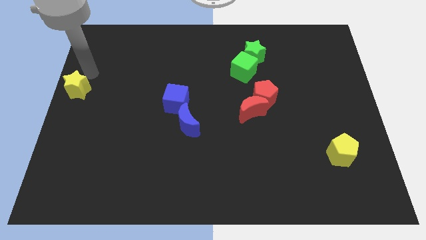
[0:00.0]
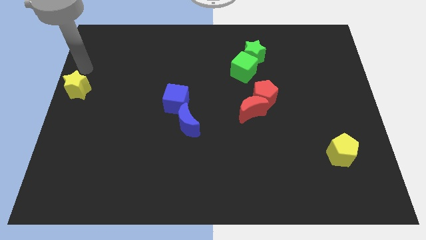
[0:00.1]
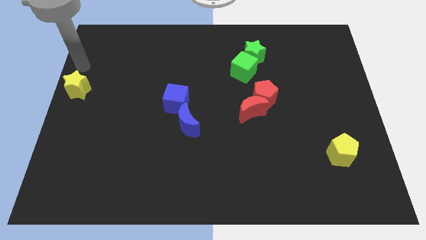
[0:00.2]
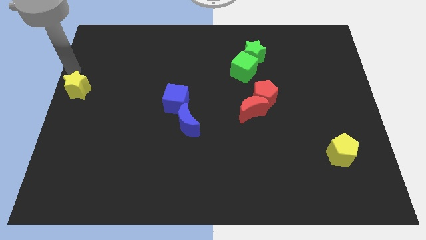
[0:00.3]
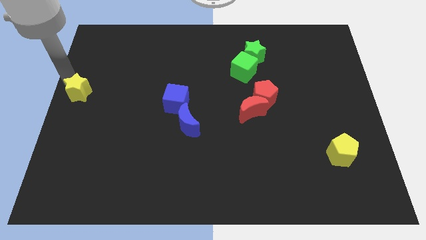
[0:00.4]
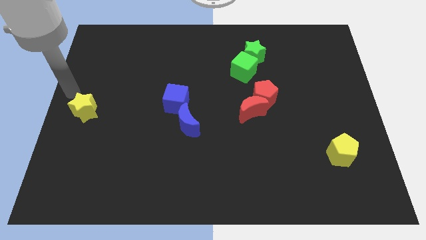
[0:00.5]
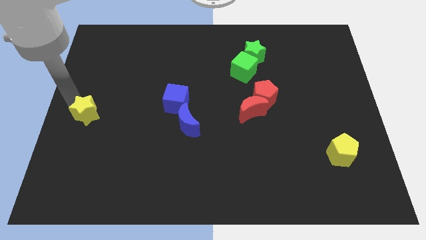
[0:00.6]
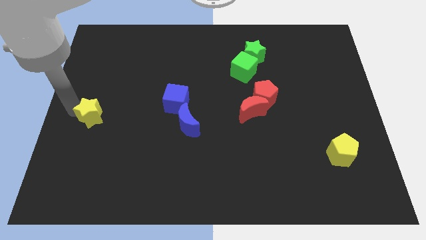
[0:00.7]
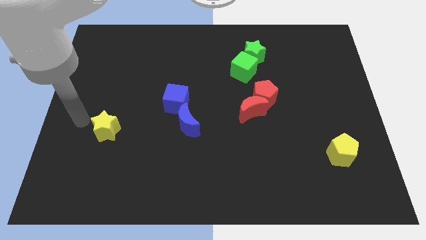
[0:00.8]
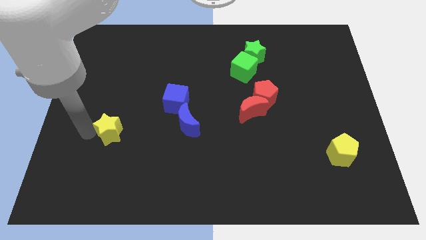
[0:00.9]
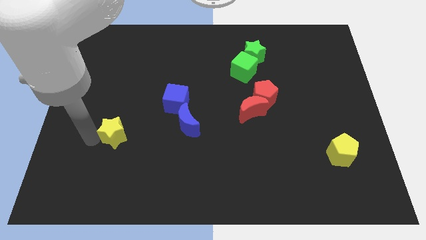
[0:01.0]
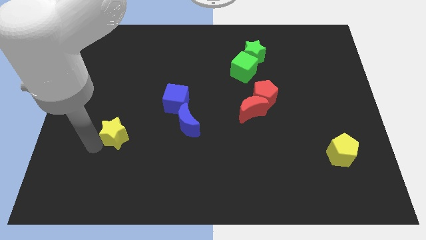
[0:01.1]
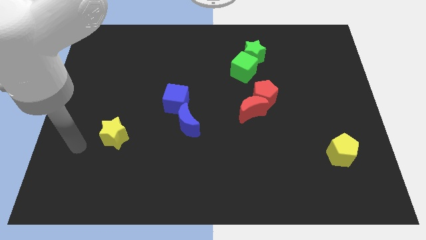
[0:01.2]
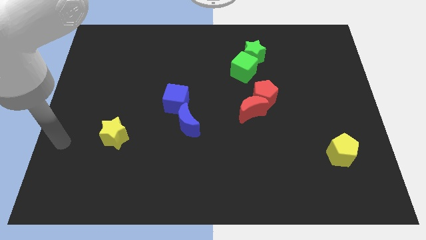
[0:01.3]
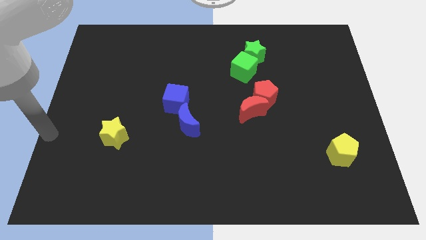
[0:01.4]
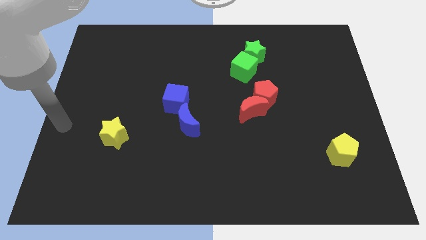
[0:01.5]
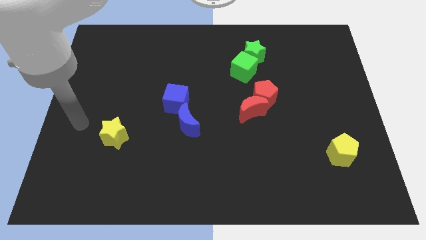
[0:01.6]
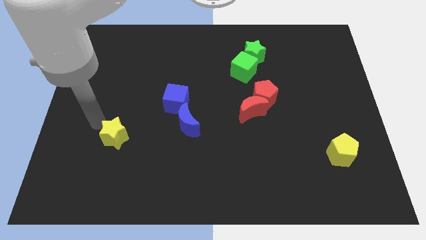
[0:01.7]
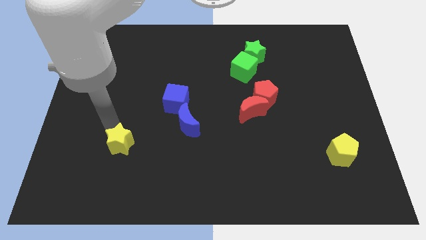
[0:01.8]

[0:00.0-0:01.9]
move the yellow star

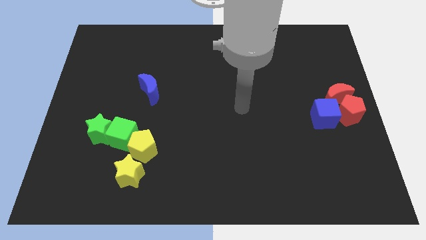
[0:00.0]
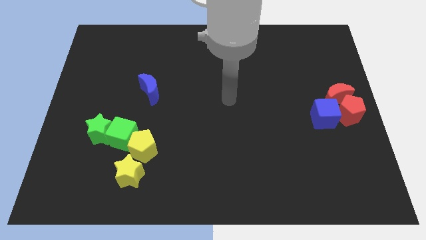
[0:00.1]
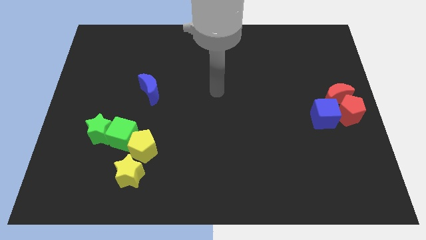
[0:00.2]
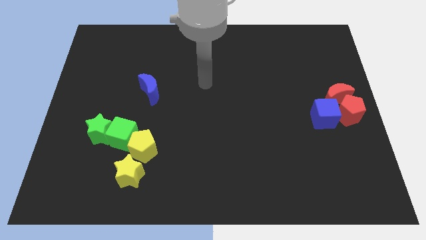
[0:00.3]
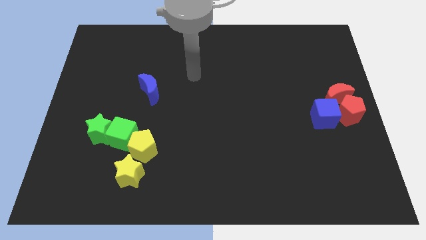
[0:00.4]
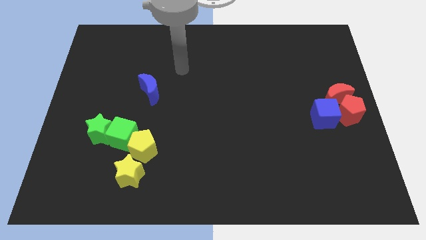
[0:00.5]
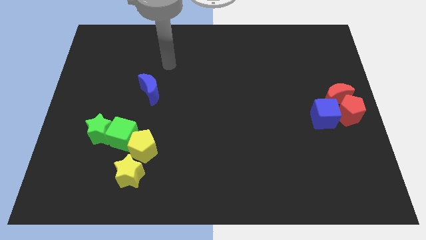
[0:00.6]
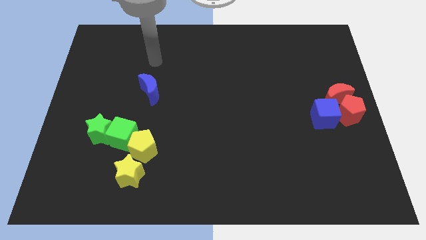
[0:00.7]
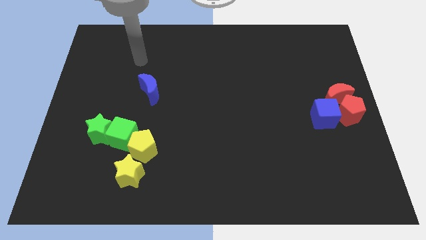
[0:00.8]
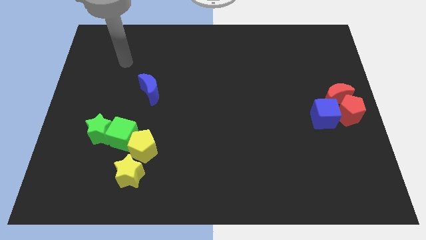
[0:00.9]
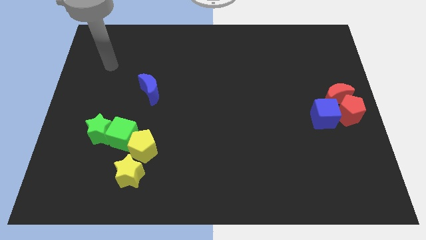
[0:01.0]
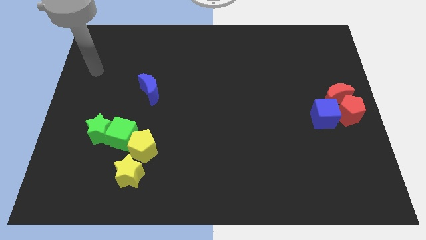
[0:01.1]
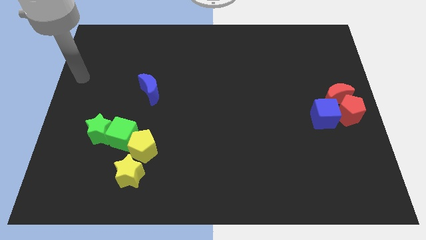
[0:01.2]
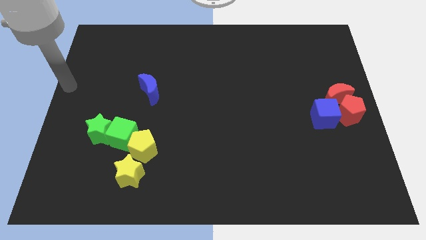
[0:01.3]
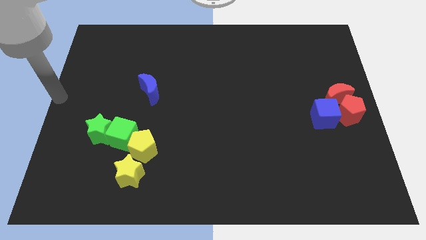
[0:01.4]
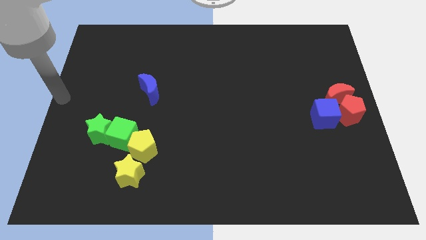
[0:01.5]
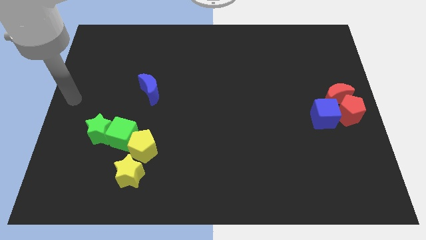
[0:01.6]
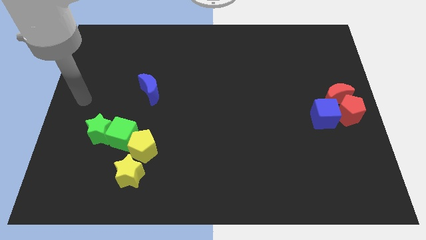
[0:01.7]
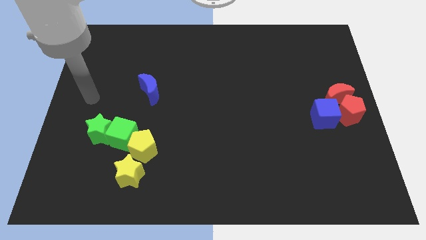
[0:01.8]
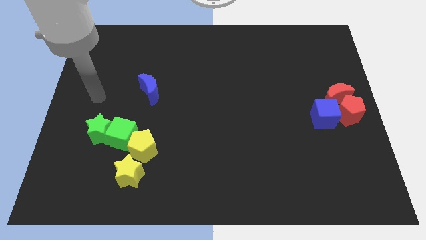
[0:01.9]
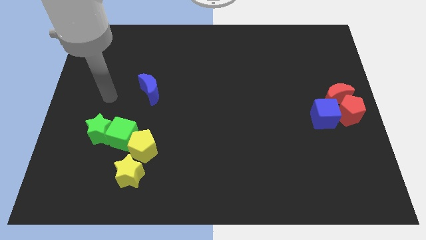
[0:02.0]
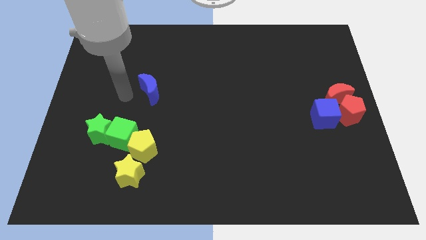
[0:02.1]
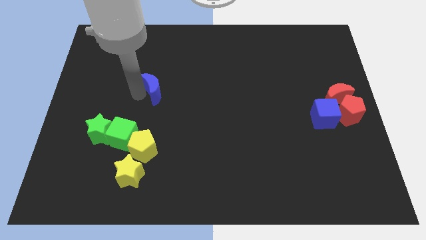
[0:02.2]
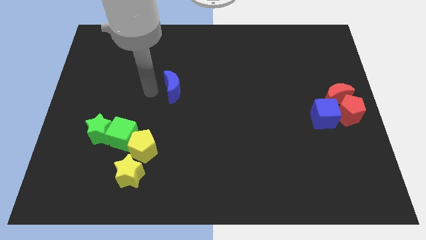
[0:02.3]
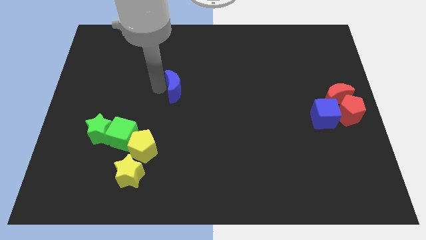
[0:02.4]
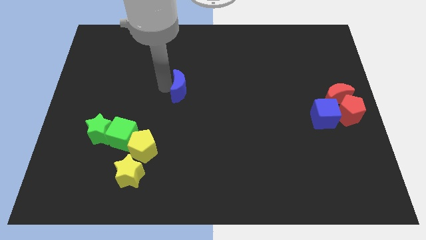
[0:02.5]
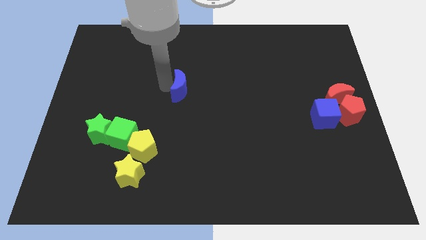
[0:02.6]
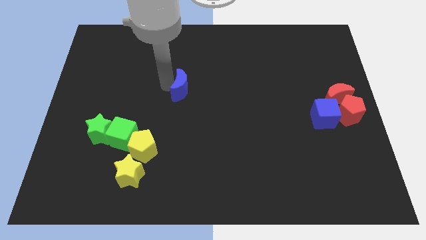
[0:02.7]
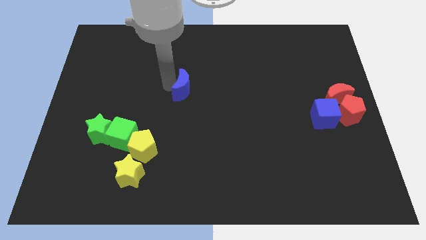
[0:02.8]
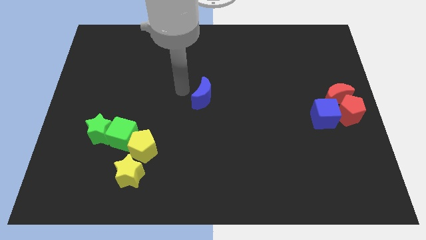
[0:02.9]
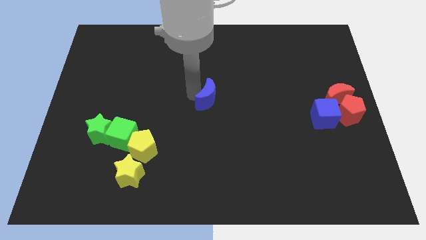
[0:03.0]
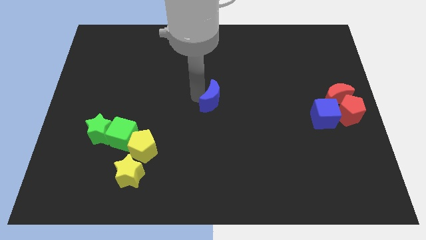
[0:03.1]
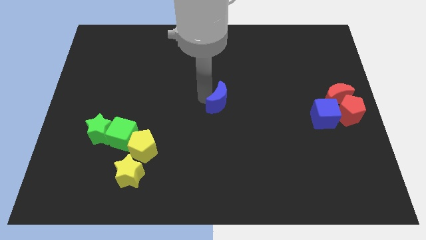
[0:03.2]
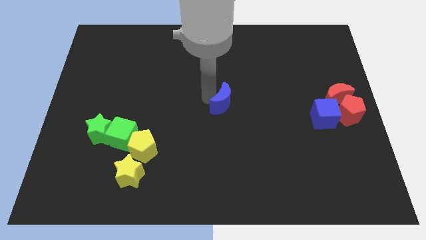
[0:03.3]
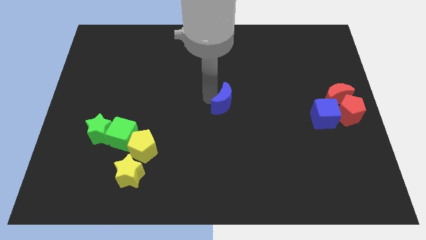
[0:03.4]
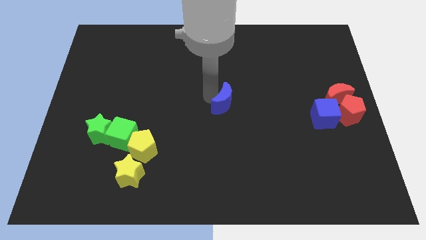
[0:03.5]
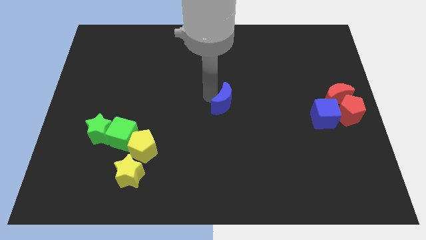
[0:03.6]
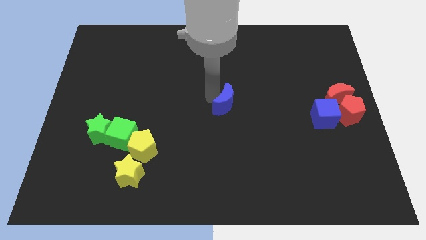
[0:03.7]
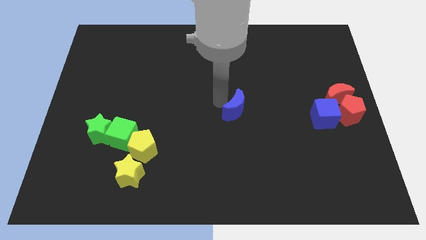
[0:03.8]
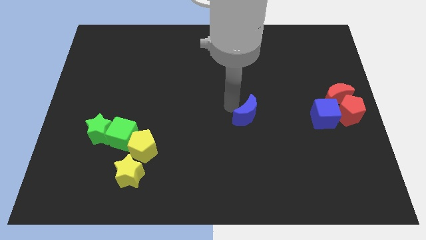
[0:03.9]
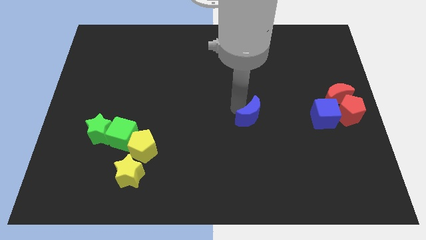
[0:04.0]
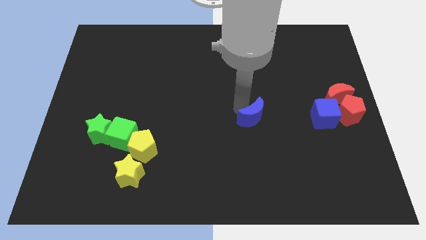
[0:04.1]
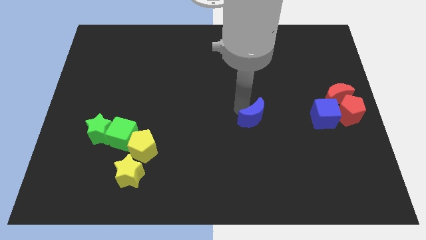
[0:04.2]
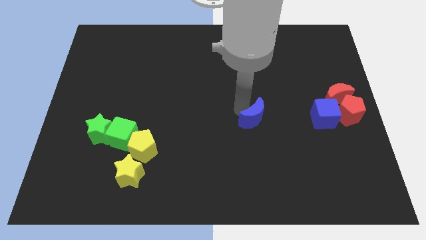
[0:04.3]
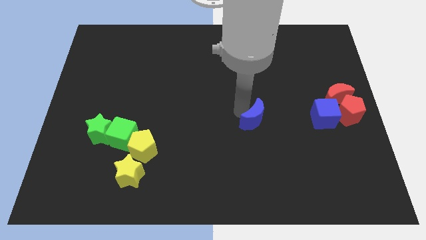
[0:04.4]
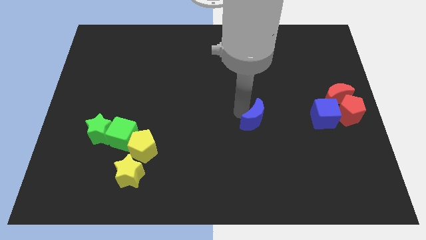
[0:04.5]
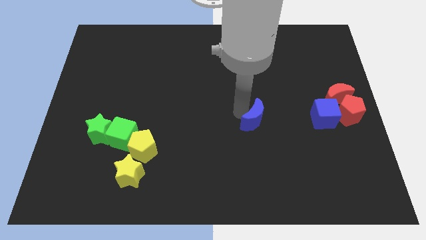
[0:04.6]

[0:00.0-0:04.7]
place the blue moon to the left of blue cube

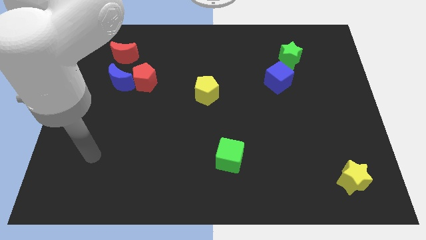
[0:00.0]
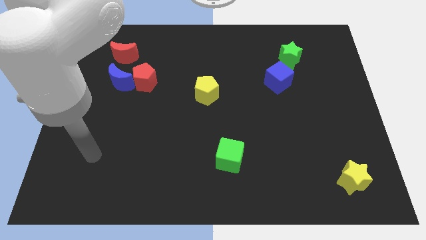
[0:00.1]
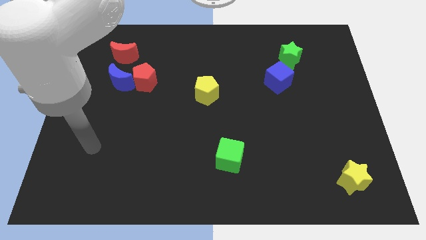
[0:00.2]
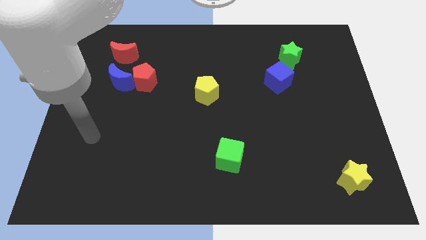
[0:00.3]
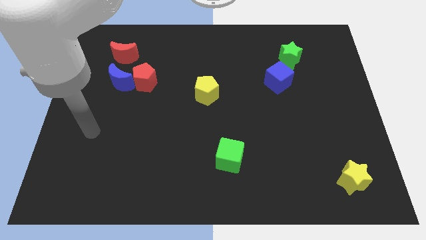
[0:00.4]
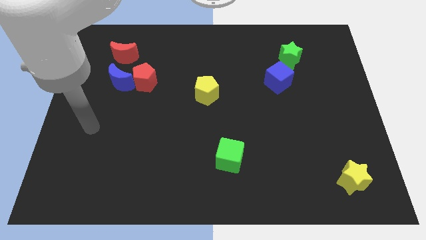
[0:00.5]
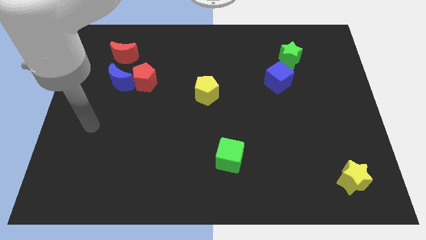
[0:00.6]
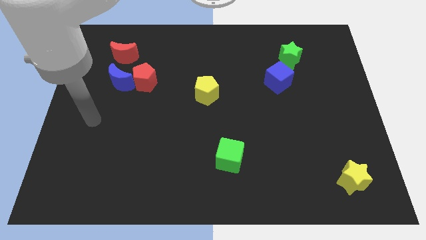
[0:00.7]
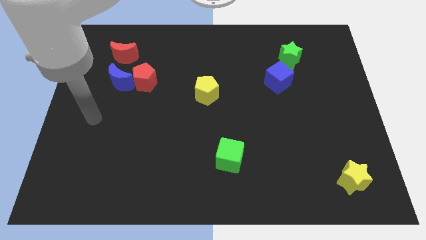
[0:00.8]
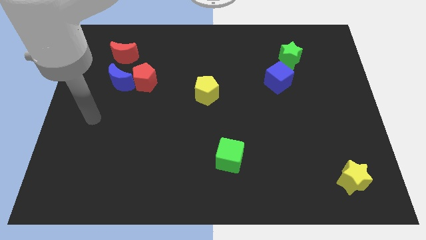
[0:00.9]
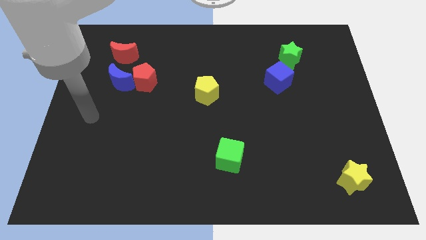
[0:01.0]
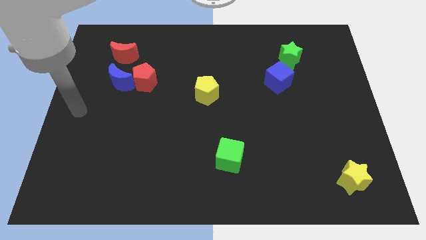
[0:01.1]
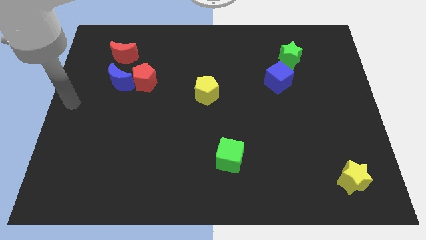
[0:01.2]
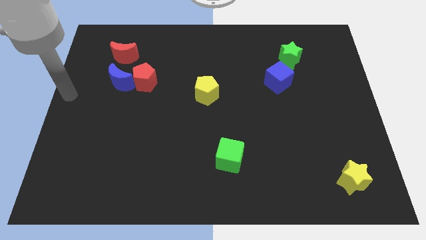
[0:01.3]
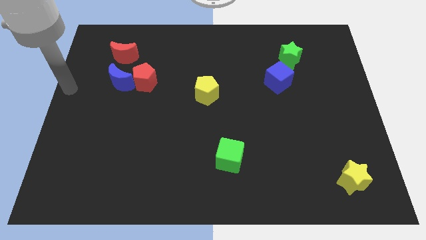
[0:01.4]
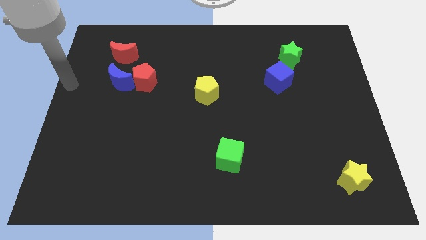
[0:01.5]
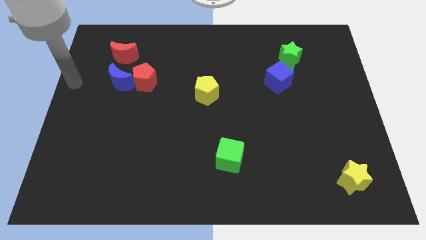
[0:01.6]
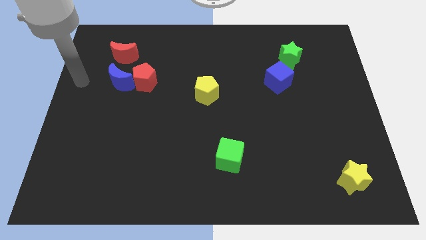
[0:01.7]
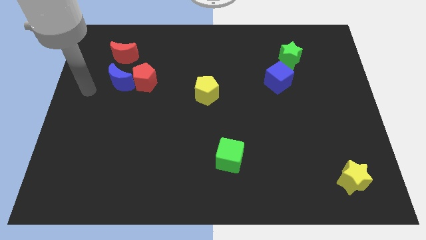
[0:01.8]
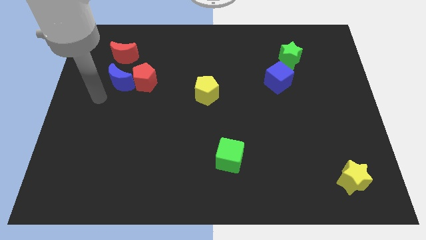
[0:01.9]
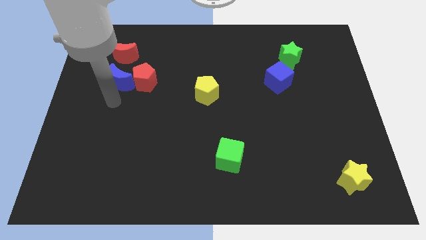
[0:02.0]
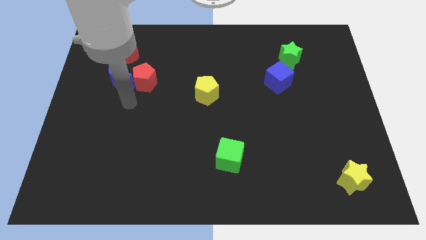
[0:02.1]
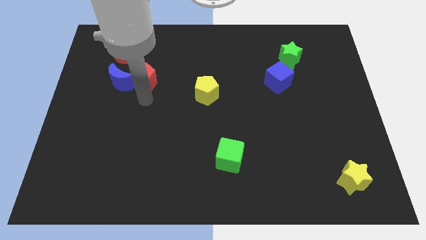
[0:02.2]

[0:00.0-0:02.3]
point your arm at the bottom side of the red pentagon

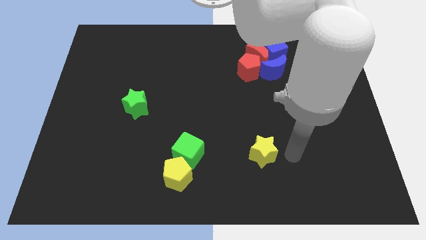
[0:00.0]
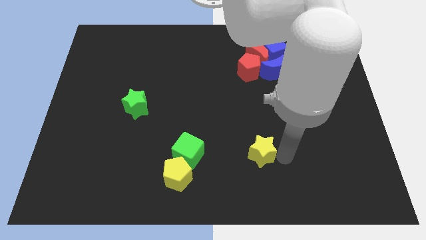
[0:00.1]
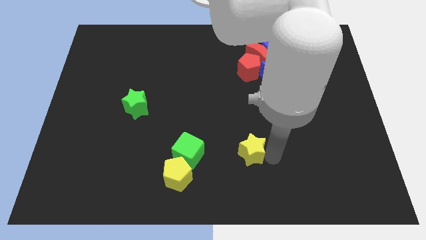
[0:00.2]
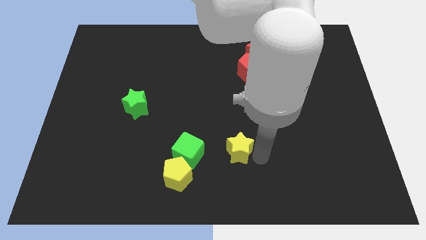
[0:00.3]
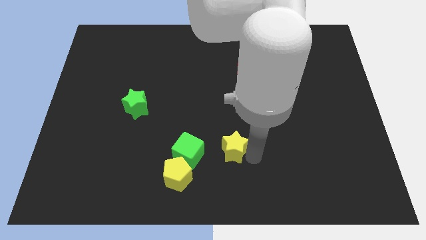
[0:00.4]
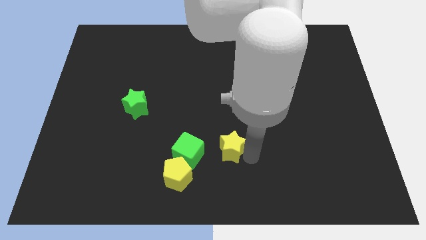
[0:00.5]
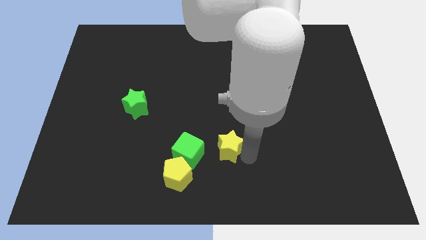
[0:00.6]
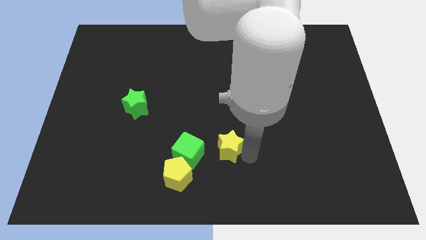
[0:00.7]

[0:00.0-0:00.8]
push the yellow star to the left of the board
